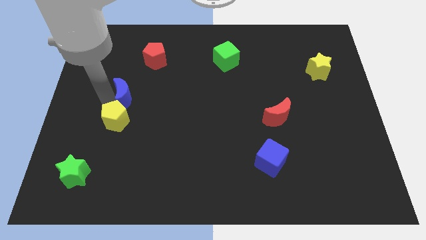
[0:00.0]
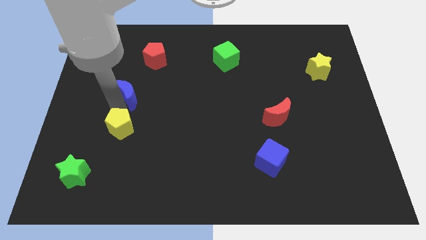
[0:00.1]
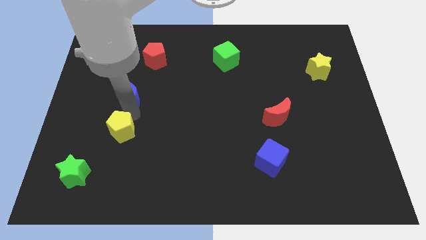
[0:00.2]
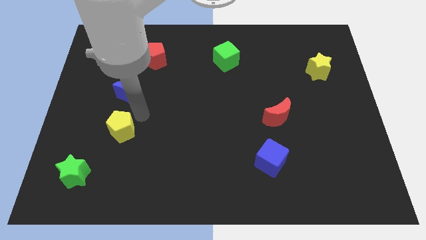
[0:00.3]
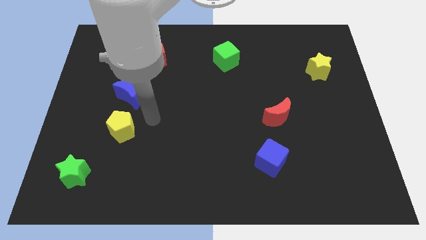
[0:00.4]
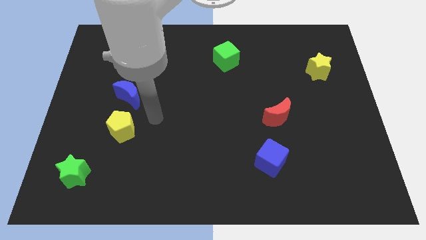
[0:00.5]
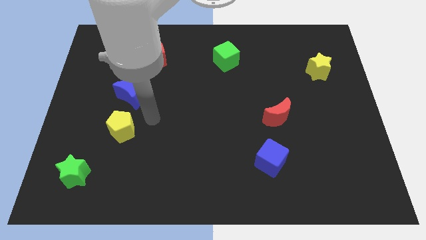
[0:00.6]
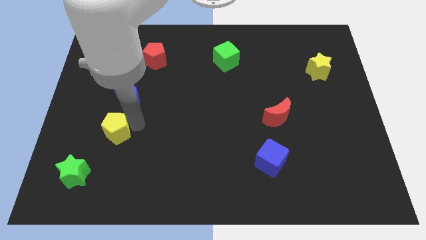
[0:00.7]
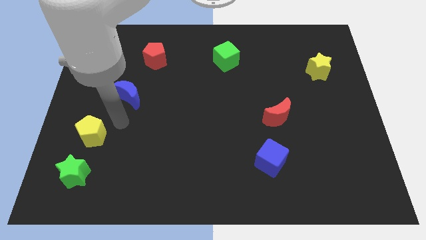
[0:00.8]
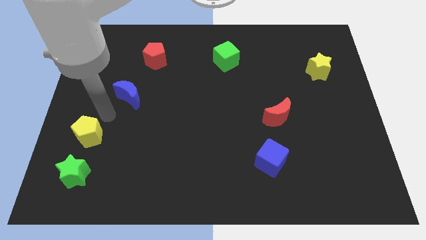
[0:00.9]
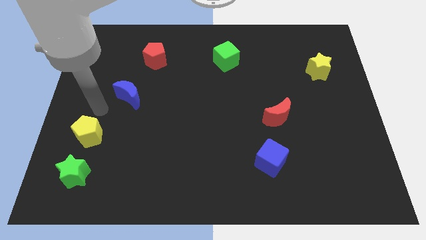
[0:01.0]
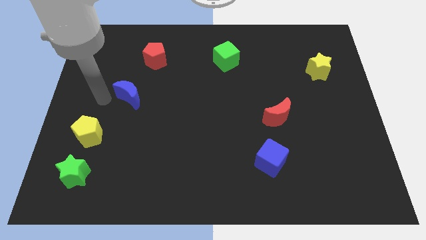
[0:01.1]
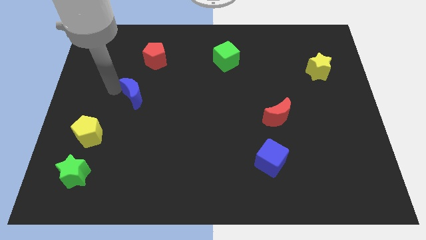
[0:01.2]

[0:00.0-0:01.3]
place yellow pentagon above green star

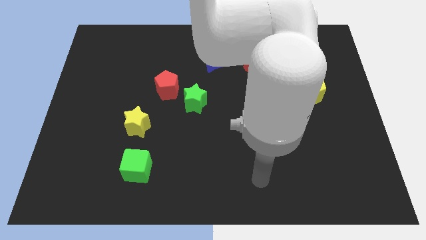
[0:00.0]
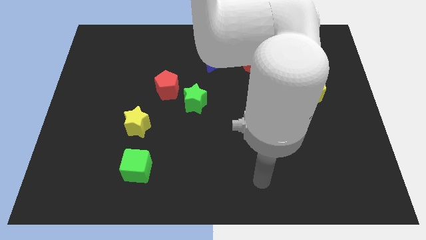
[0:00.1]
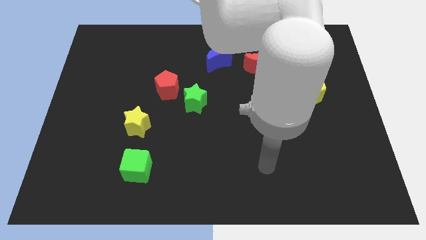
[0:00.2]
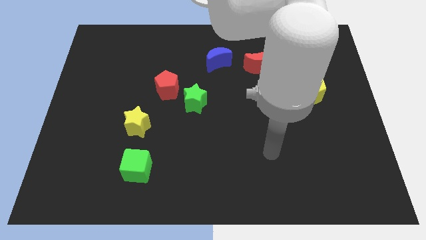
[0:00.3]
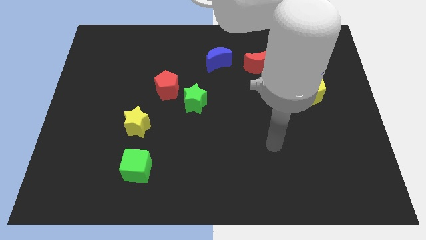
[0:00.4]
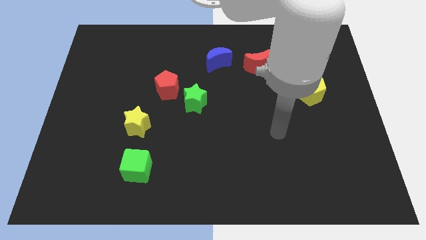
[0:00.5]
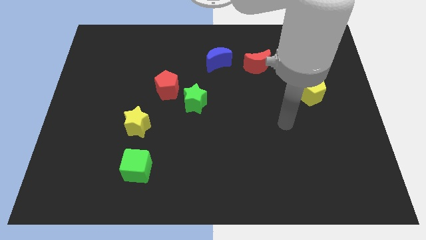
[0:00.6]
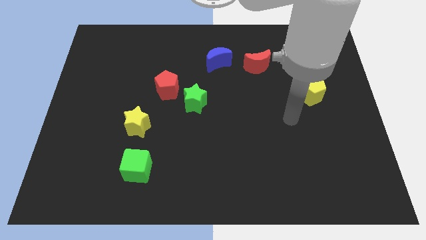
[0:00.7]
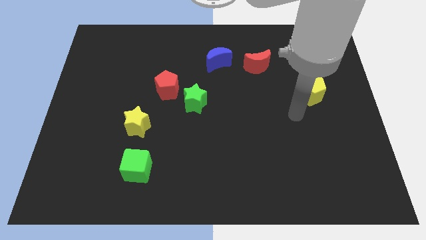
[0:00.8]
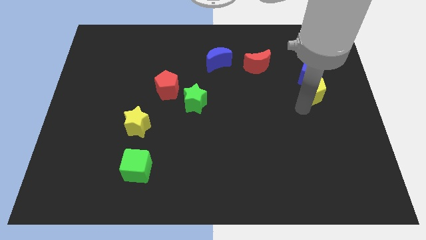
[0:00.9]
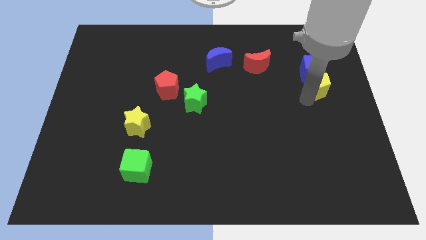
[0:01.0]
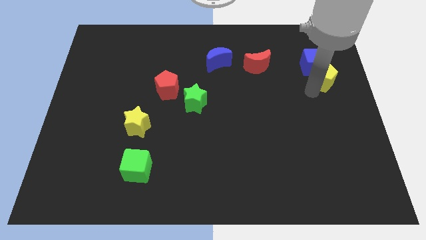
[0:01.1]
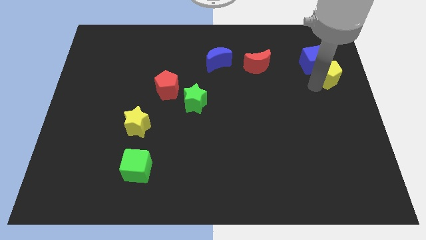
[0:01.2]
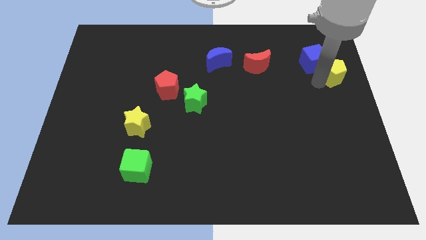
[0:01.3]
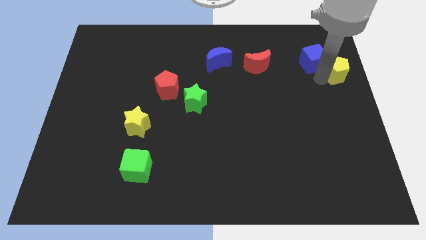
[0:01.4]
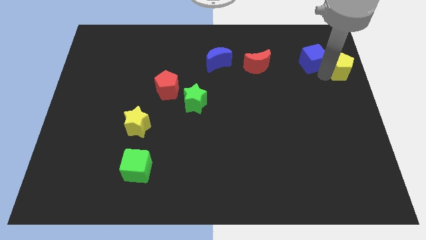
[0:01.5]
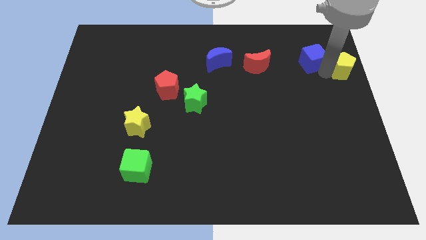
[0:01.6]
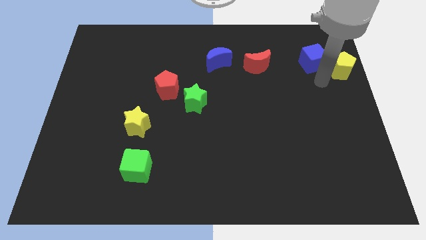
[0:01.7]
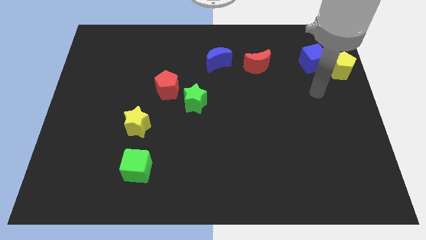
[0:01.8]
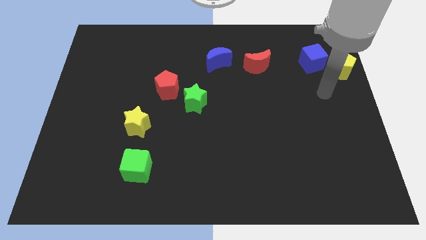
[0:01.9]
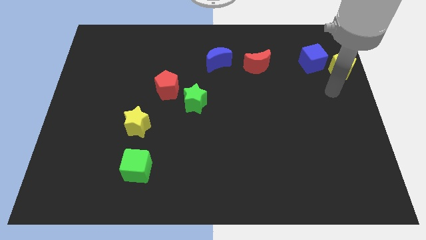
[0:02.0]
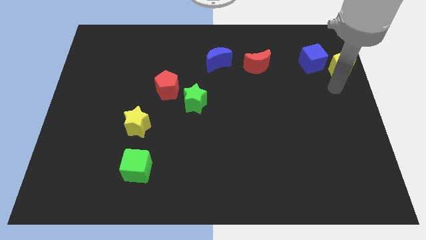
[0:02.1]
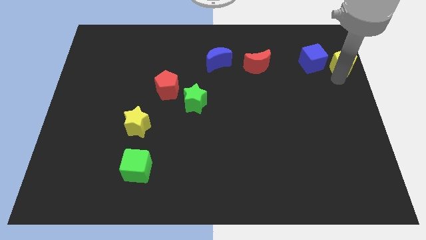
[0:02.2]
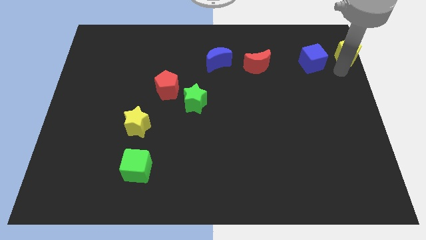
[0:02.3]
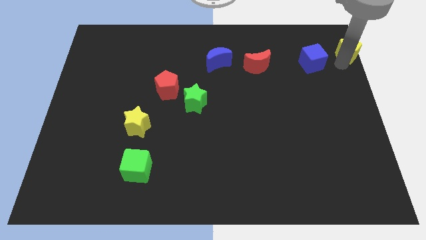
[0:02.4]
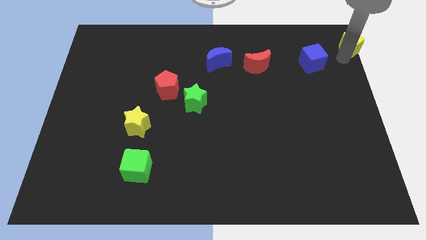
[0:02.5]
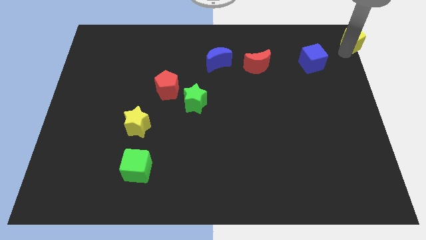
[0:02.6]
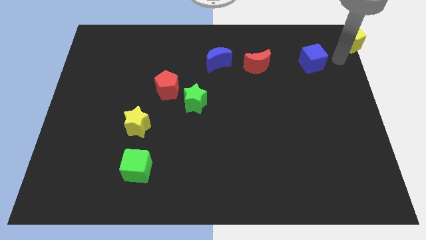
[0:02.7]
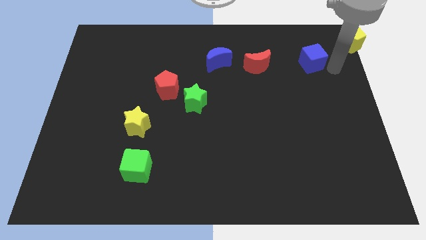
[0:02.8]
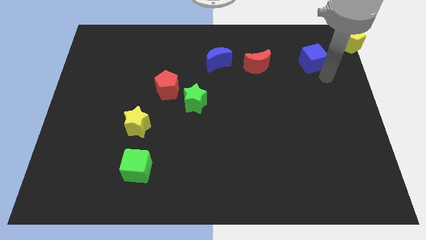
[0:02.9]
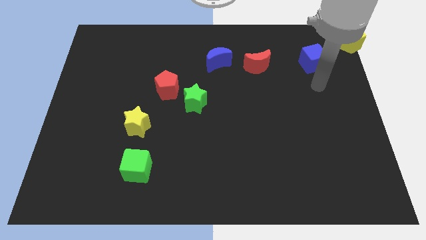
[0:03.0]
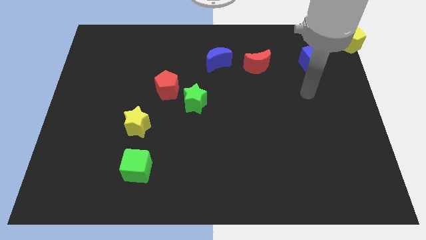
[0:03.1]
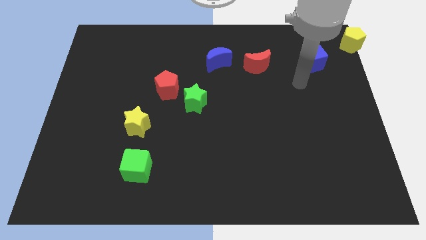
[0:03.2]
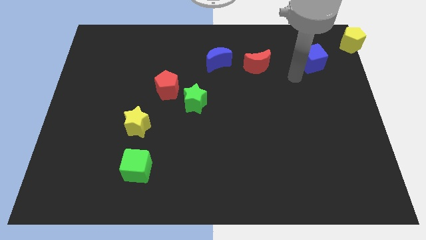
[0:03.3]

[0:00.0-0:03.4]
move the yellow pentagon to the top right corner

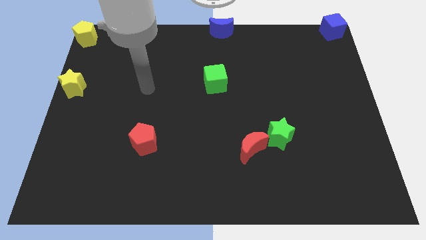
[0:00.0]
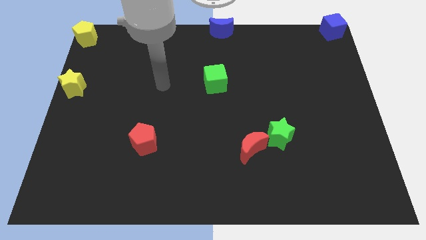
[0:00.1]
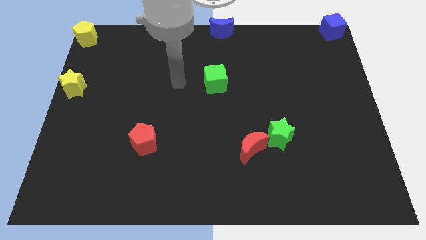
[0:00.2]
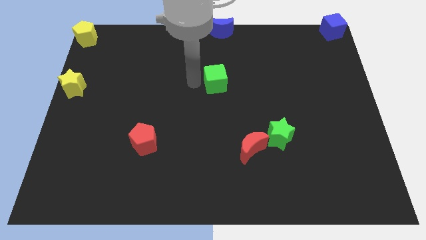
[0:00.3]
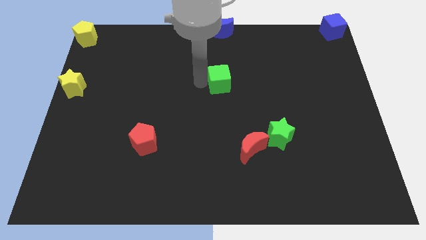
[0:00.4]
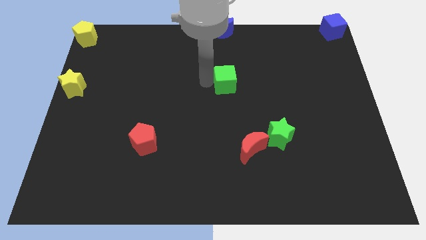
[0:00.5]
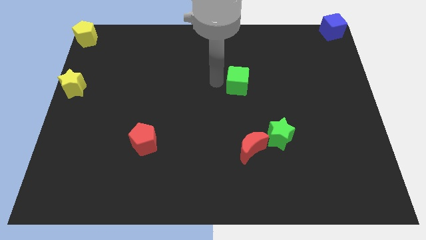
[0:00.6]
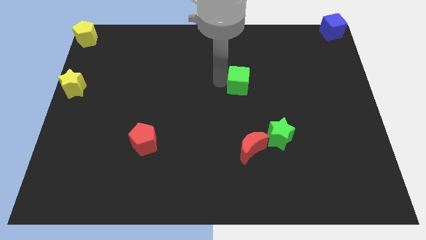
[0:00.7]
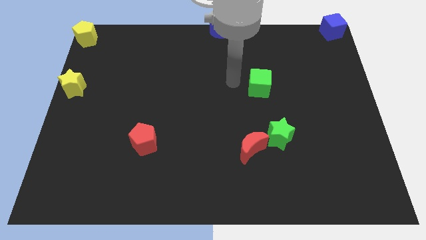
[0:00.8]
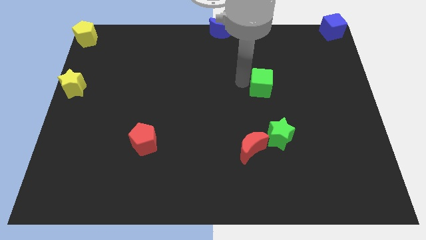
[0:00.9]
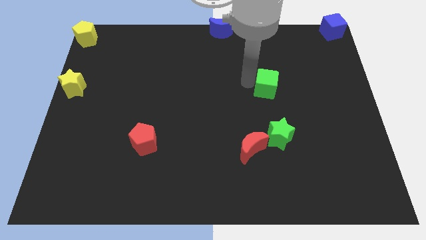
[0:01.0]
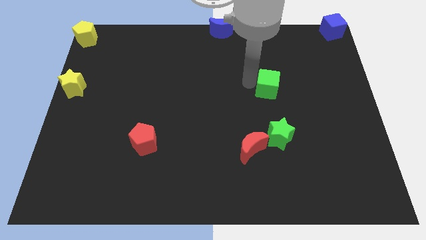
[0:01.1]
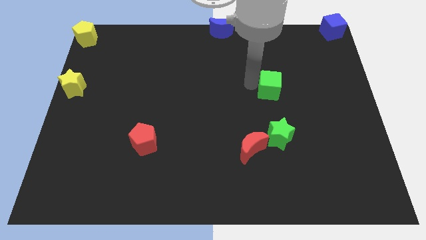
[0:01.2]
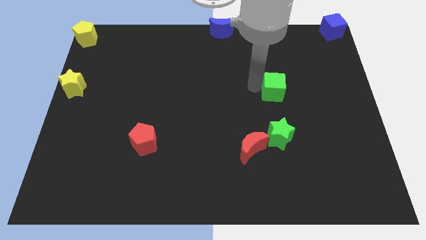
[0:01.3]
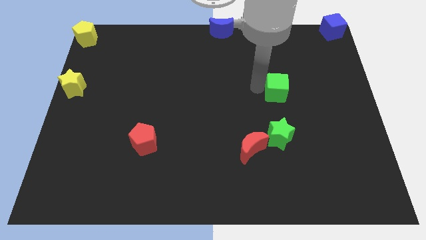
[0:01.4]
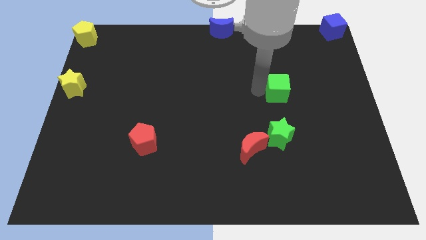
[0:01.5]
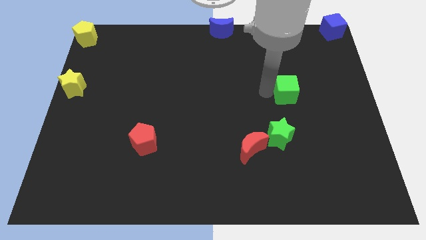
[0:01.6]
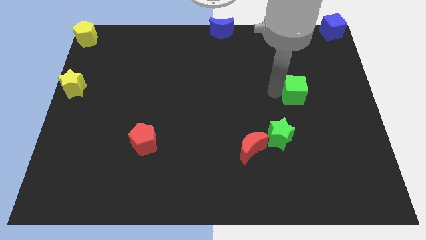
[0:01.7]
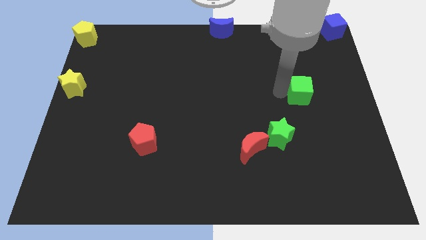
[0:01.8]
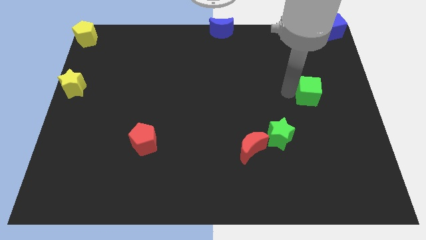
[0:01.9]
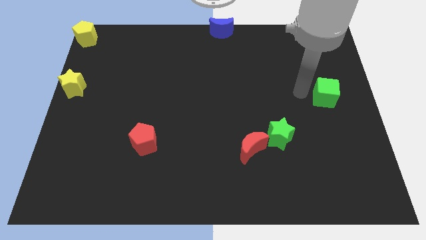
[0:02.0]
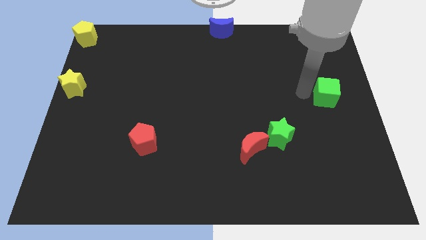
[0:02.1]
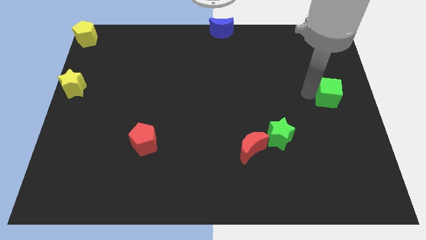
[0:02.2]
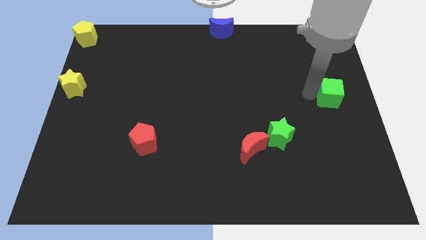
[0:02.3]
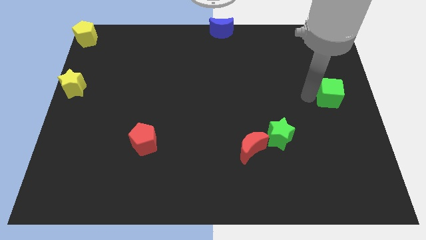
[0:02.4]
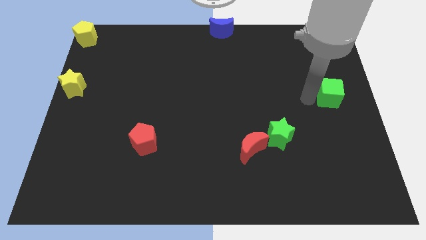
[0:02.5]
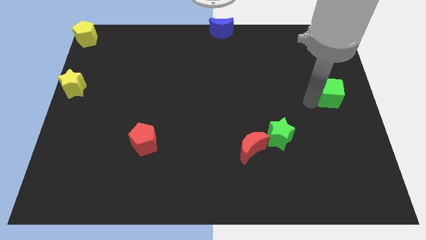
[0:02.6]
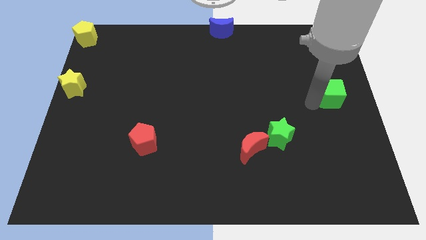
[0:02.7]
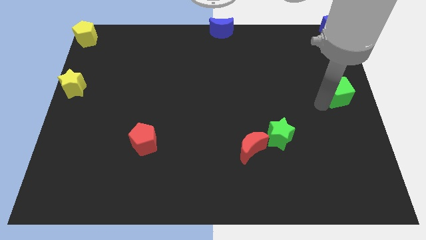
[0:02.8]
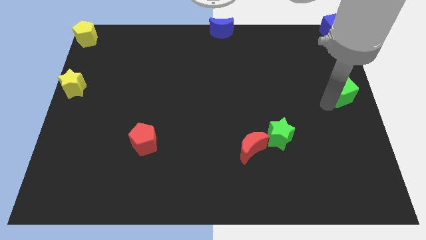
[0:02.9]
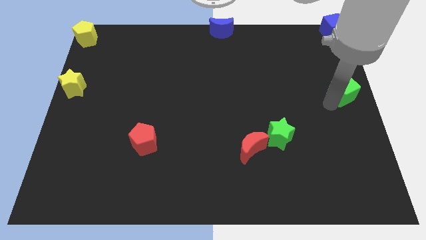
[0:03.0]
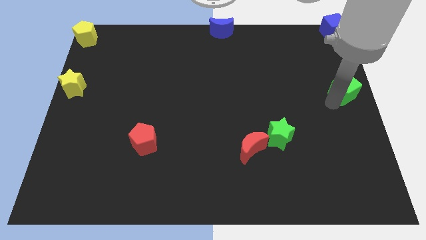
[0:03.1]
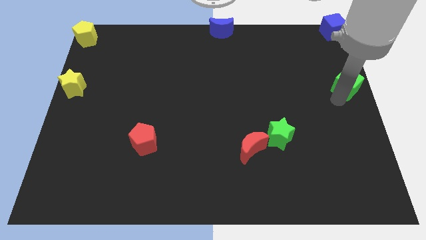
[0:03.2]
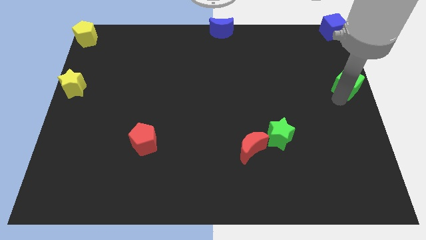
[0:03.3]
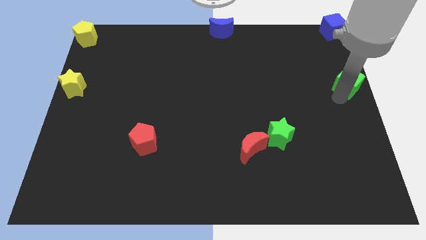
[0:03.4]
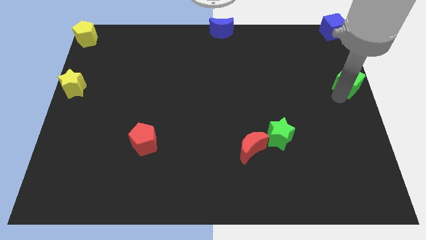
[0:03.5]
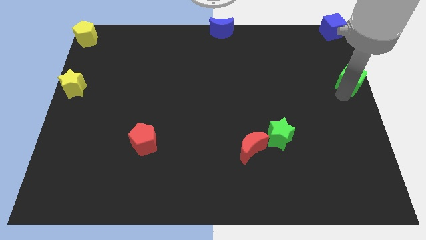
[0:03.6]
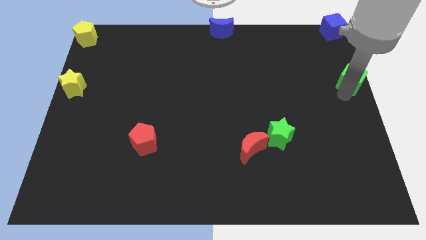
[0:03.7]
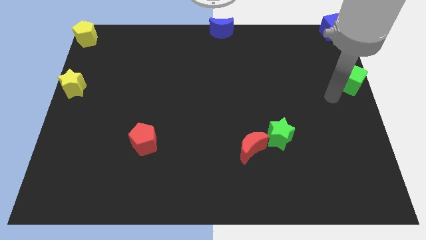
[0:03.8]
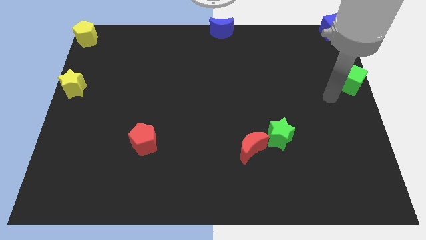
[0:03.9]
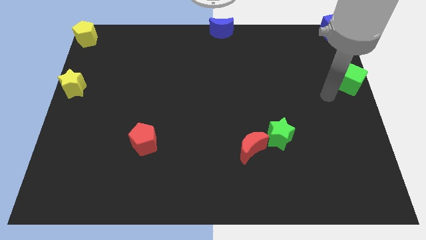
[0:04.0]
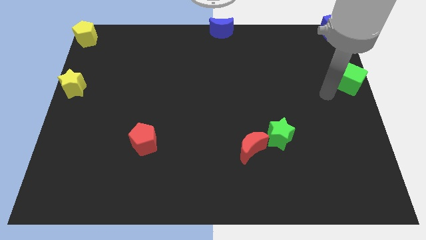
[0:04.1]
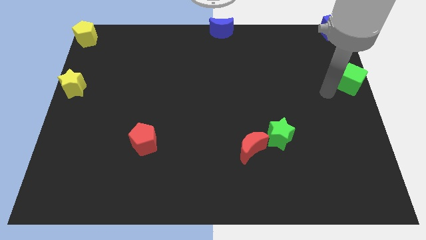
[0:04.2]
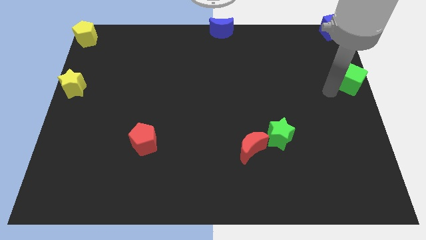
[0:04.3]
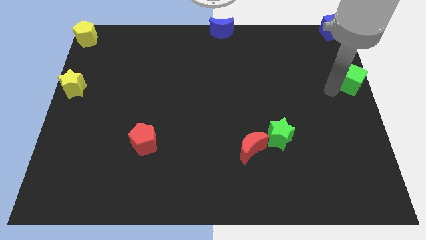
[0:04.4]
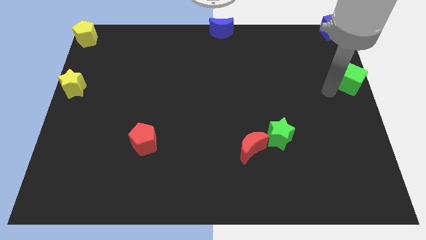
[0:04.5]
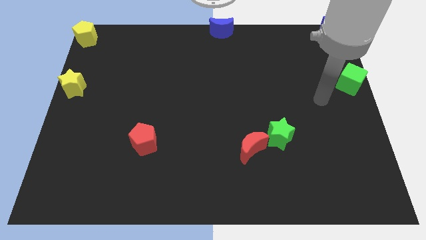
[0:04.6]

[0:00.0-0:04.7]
move the green cube to the middle right
